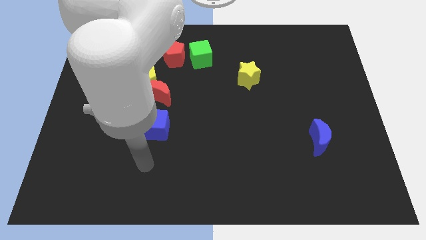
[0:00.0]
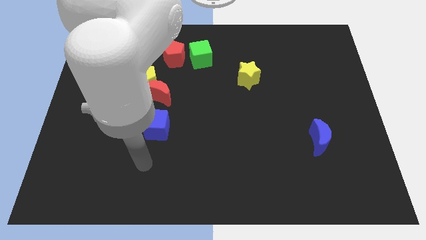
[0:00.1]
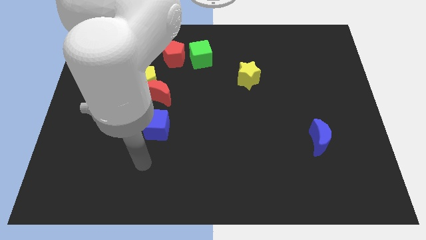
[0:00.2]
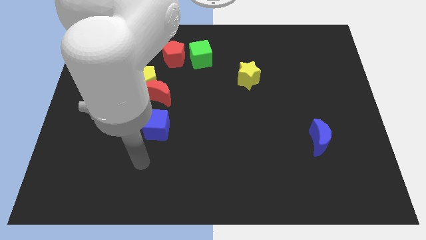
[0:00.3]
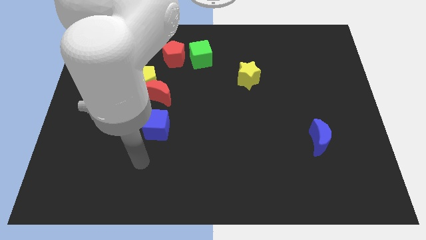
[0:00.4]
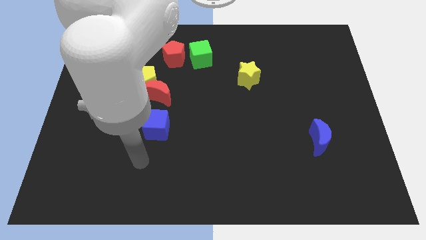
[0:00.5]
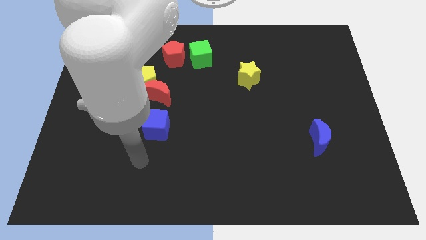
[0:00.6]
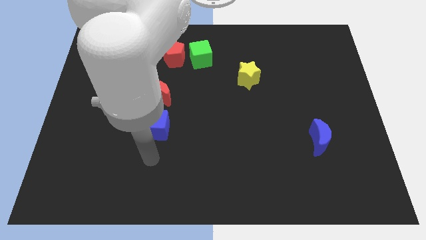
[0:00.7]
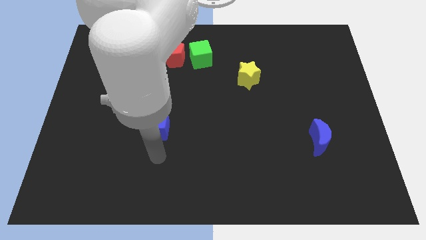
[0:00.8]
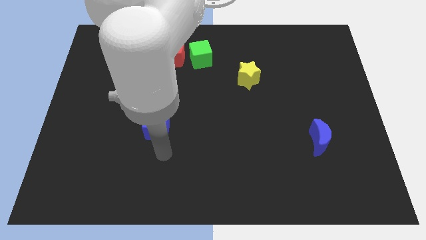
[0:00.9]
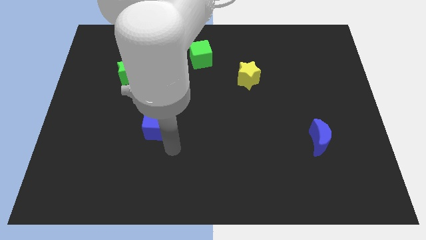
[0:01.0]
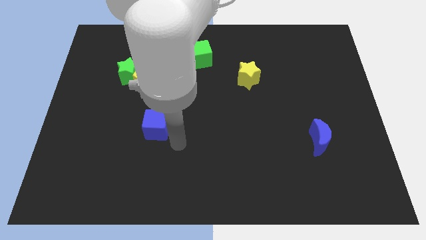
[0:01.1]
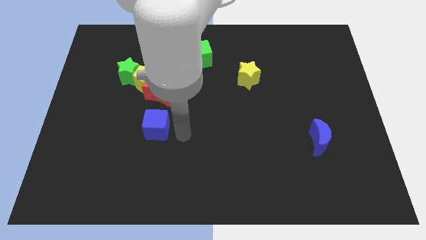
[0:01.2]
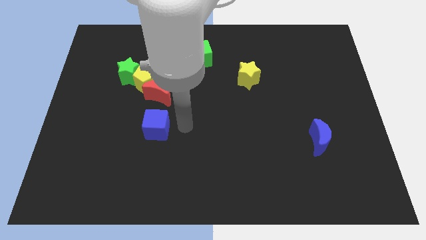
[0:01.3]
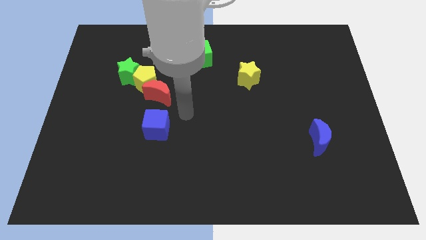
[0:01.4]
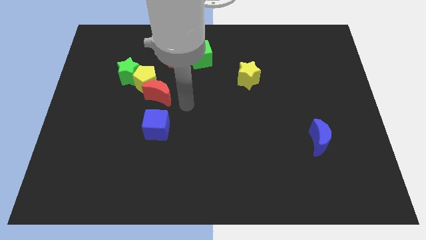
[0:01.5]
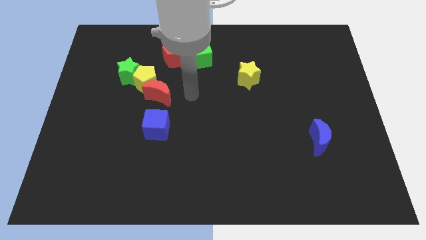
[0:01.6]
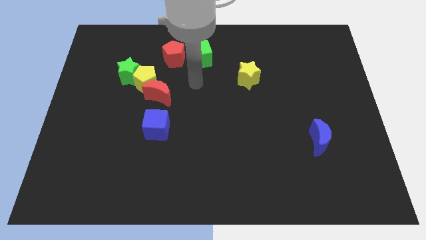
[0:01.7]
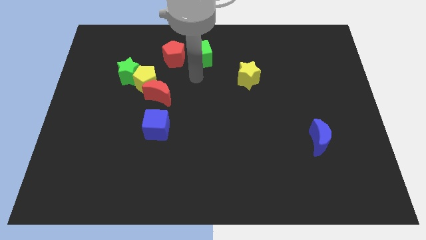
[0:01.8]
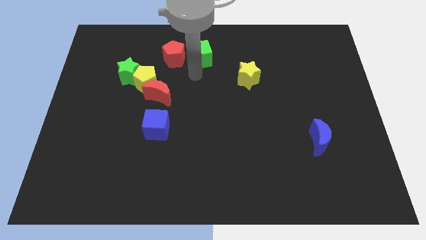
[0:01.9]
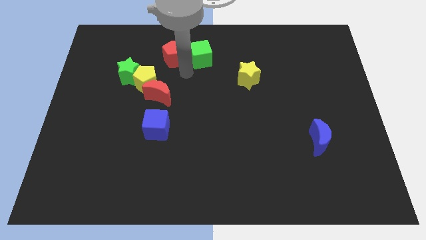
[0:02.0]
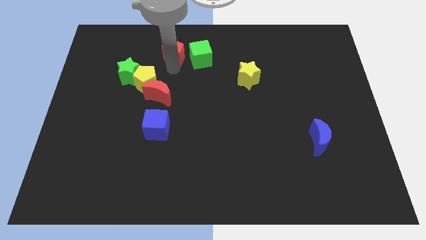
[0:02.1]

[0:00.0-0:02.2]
touch the bottom side of the red pentagon

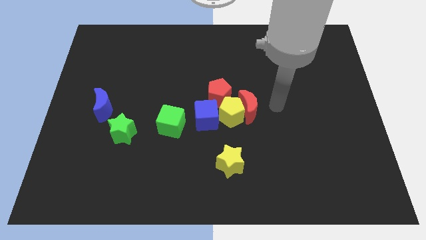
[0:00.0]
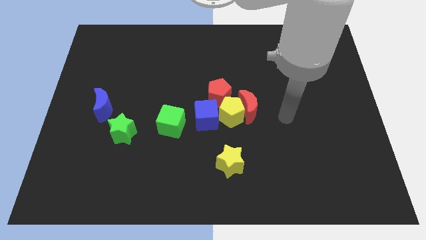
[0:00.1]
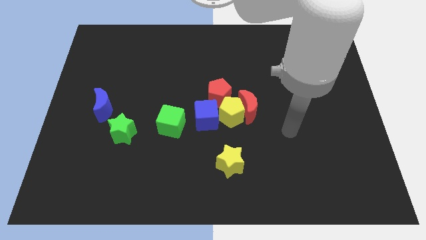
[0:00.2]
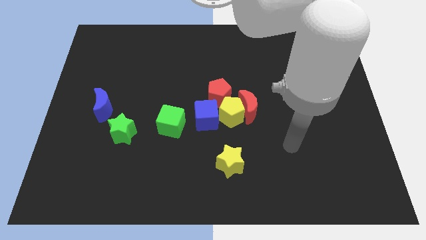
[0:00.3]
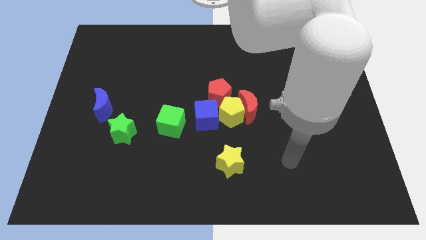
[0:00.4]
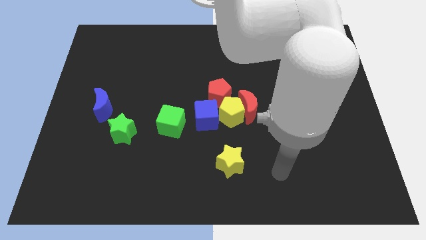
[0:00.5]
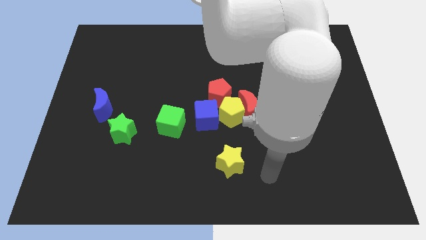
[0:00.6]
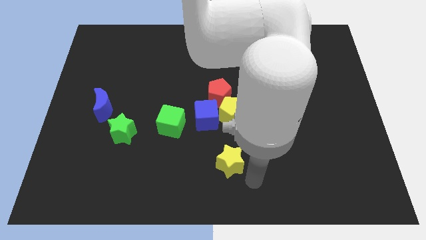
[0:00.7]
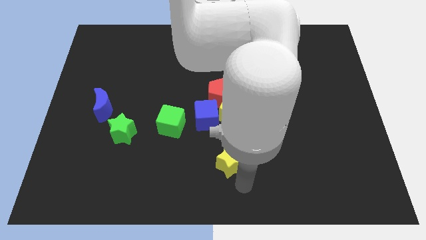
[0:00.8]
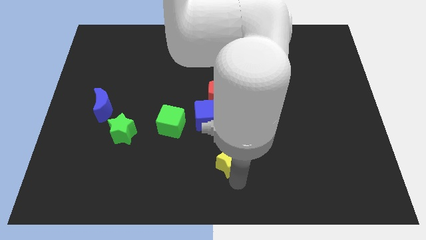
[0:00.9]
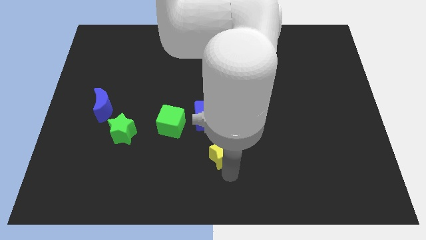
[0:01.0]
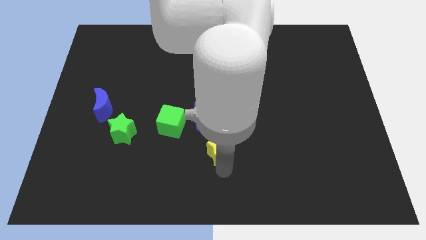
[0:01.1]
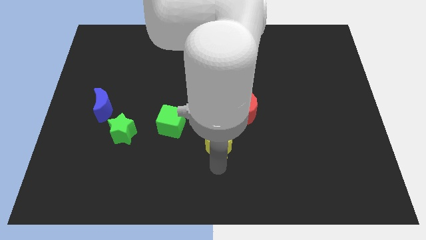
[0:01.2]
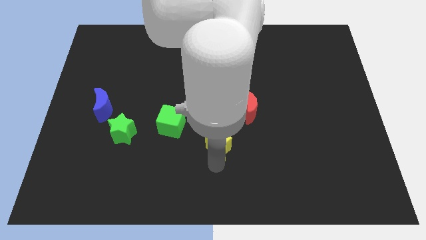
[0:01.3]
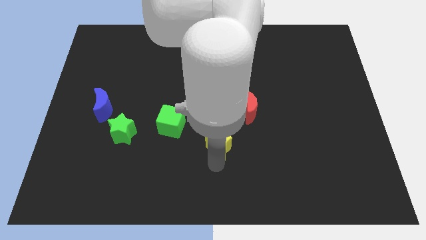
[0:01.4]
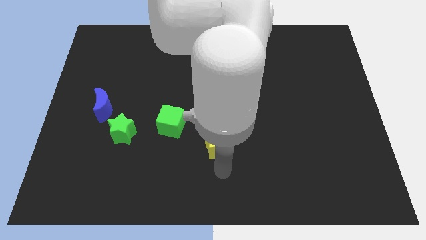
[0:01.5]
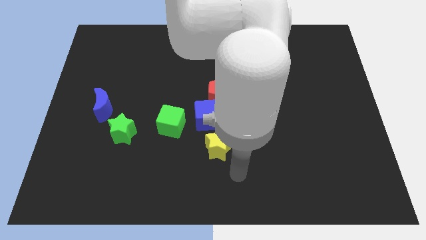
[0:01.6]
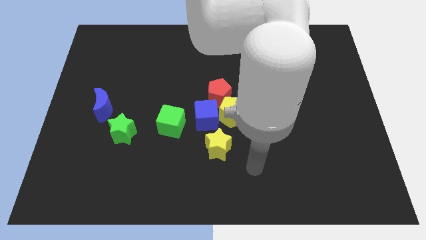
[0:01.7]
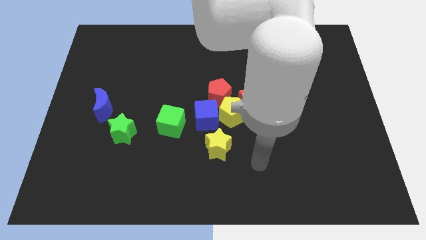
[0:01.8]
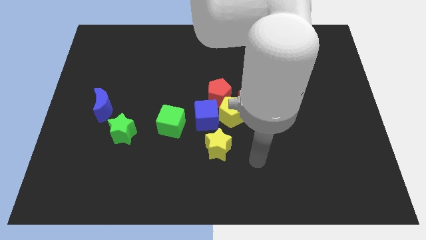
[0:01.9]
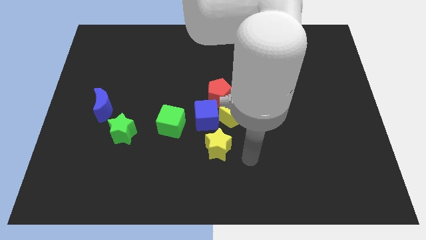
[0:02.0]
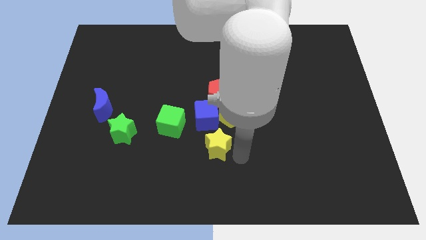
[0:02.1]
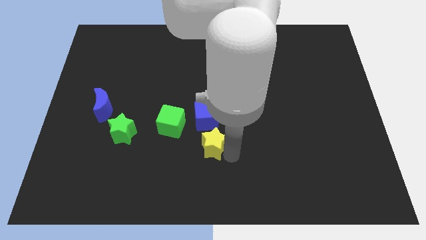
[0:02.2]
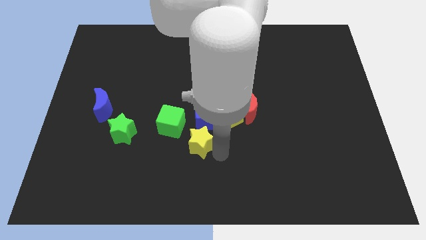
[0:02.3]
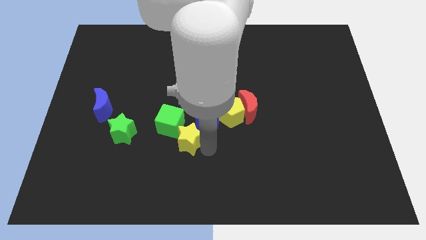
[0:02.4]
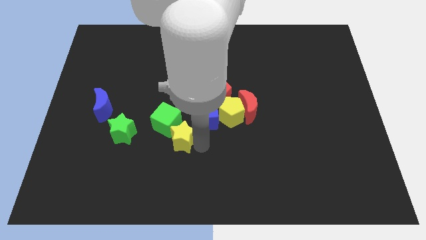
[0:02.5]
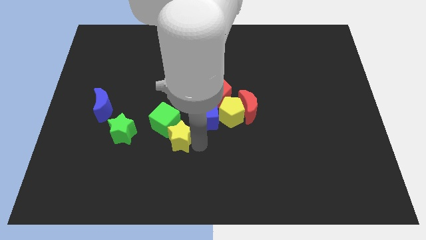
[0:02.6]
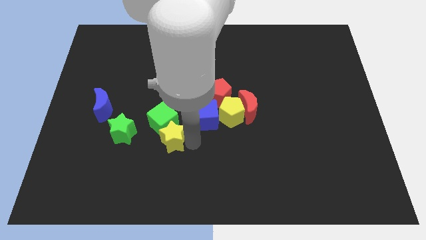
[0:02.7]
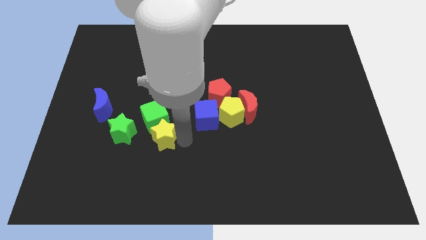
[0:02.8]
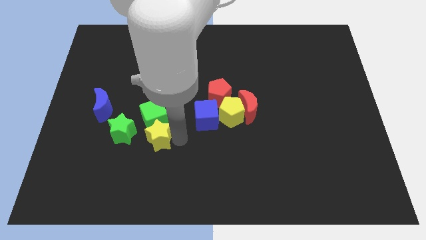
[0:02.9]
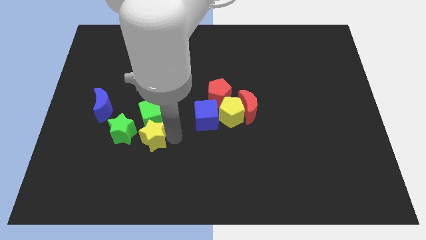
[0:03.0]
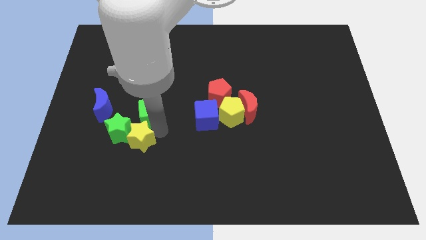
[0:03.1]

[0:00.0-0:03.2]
place the yellow star to the bottom right side of the green cube

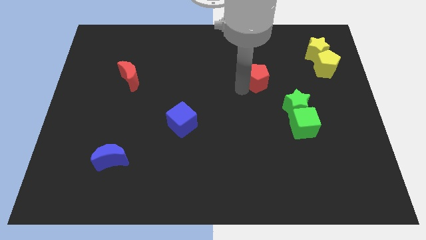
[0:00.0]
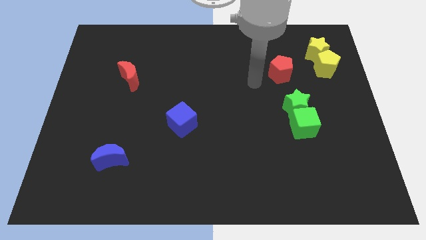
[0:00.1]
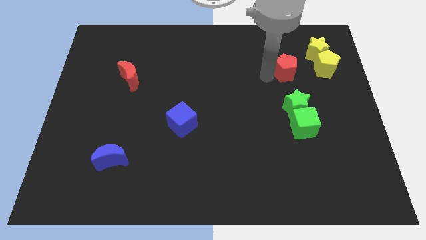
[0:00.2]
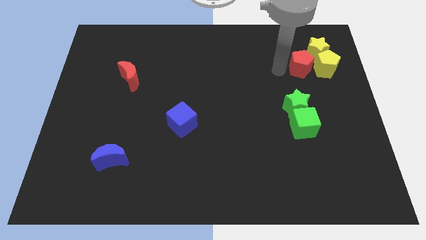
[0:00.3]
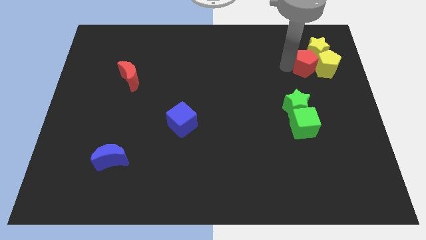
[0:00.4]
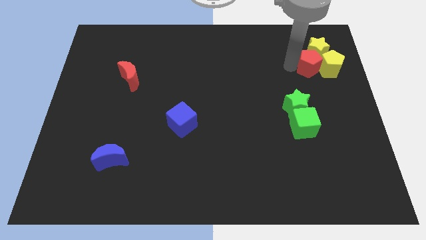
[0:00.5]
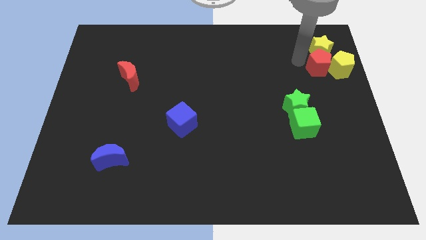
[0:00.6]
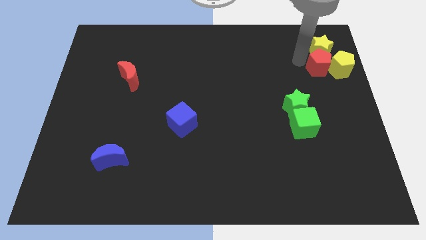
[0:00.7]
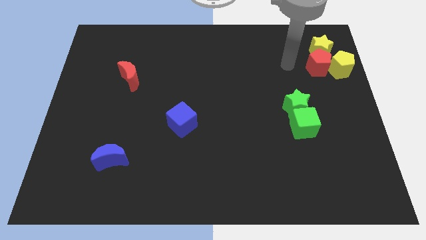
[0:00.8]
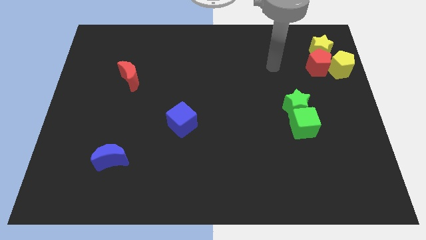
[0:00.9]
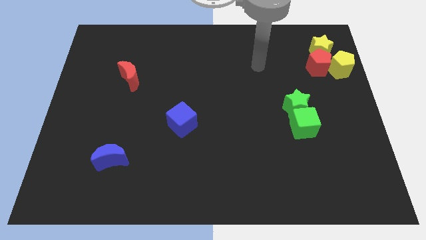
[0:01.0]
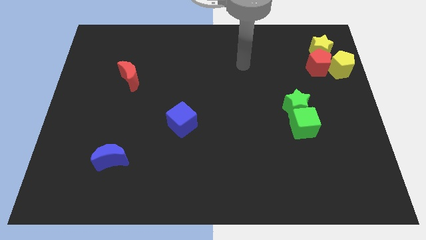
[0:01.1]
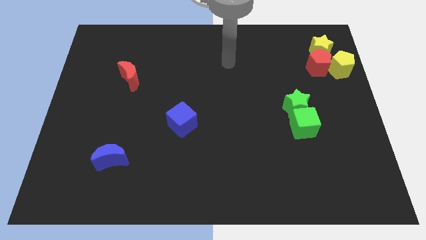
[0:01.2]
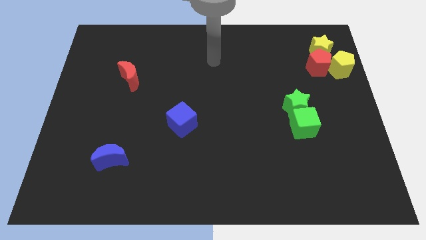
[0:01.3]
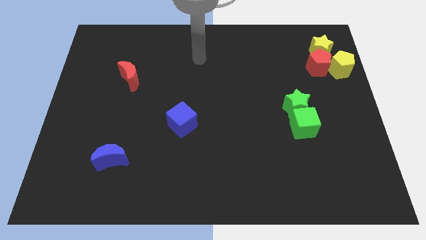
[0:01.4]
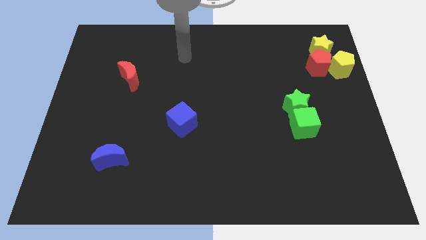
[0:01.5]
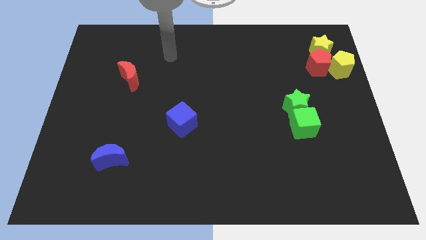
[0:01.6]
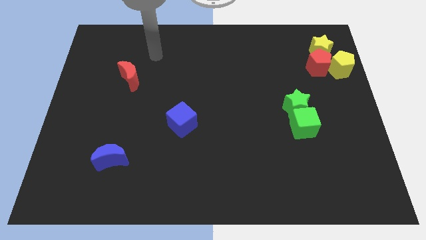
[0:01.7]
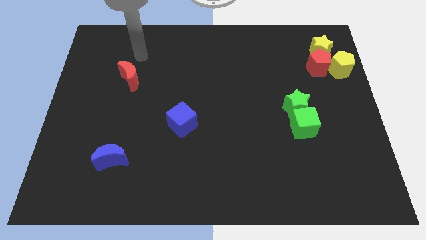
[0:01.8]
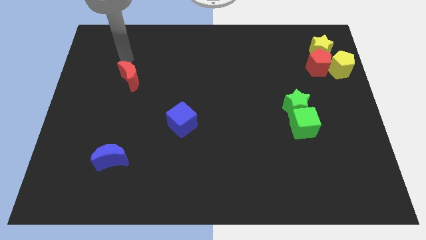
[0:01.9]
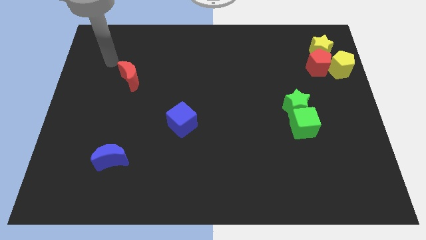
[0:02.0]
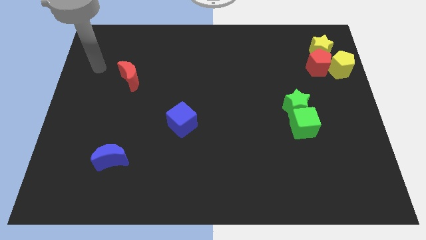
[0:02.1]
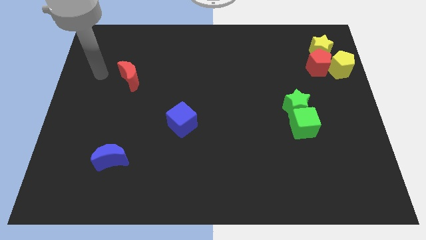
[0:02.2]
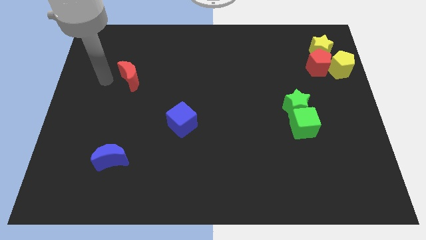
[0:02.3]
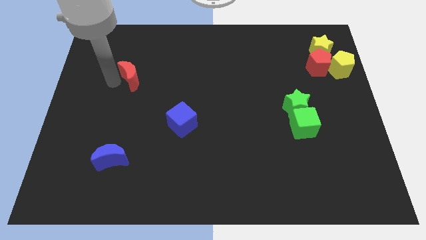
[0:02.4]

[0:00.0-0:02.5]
move the arm to the left of the red moon

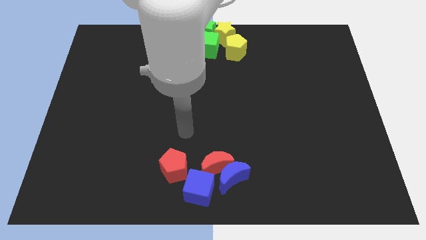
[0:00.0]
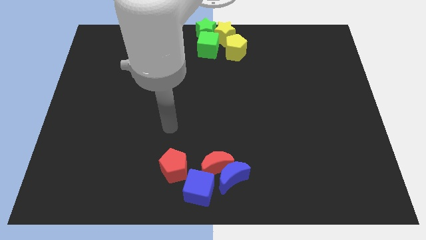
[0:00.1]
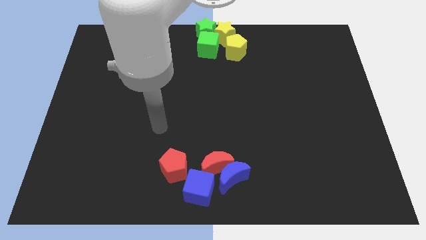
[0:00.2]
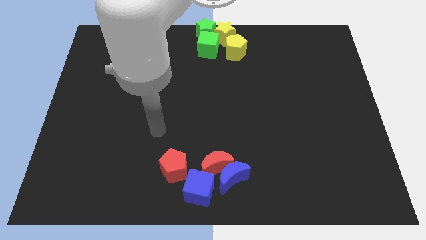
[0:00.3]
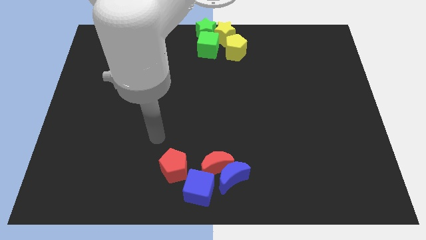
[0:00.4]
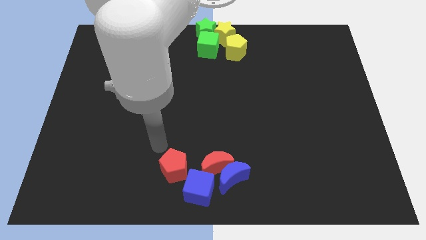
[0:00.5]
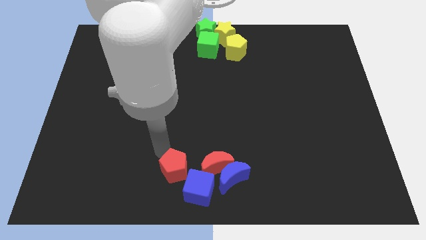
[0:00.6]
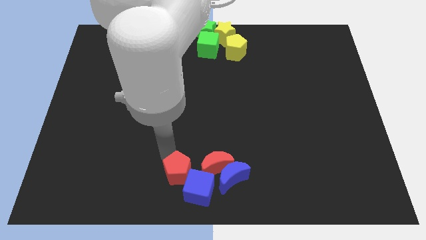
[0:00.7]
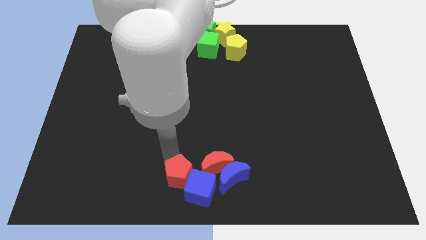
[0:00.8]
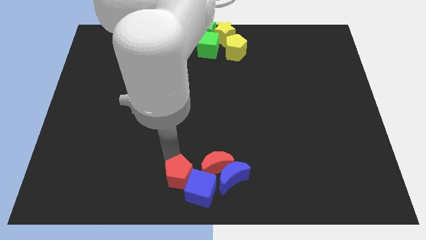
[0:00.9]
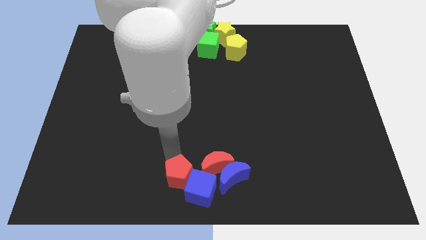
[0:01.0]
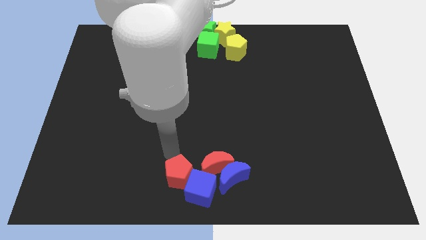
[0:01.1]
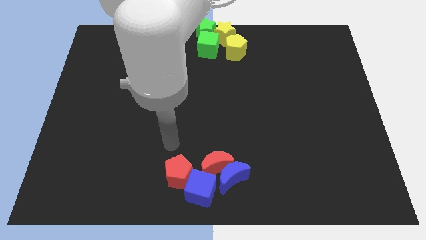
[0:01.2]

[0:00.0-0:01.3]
slightly touch down the red pentagon
